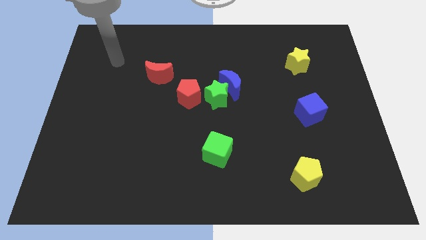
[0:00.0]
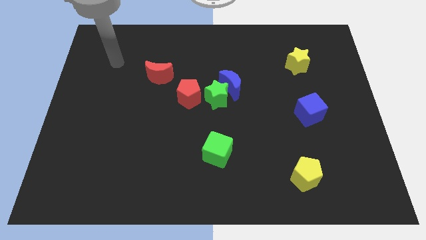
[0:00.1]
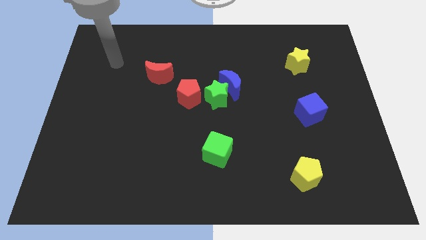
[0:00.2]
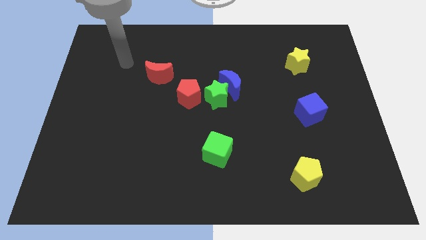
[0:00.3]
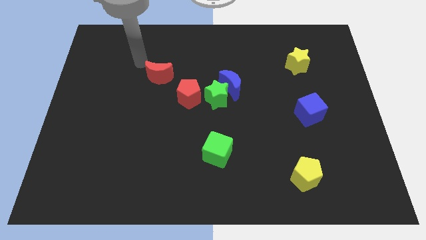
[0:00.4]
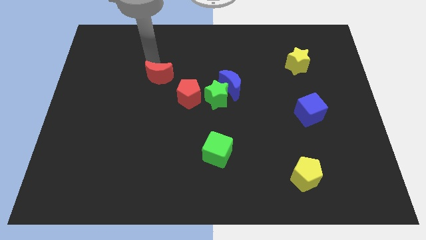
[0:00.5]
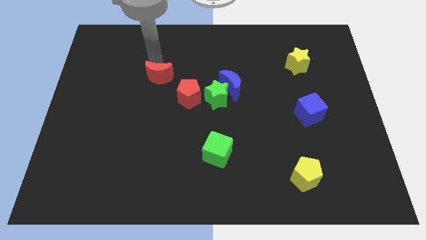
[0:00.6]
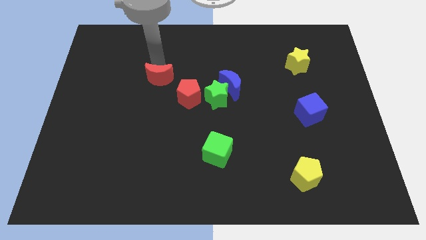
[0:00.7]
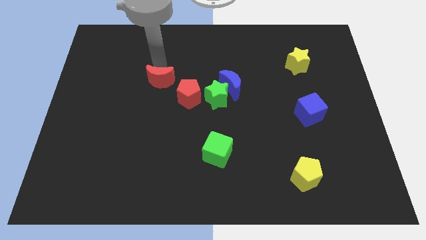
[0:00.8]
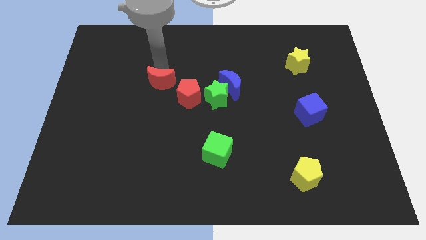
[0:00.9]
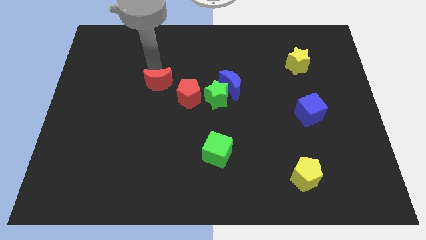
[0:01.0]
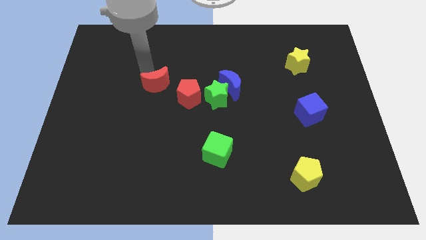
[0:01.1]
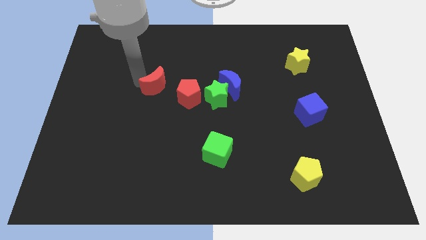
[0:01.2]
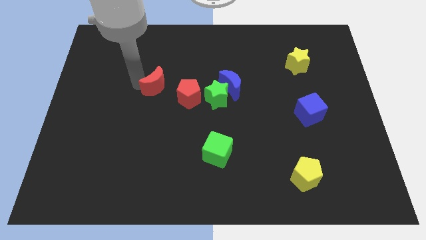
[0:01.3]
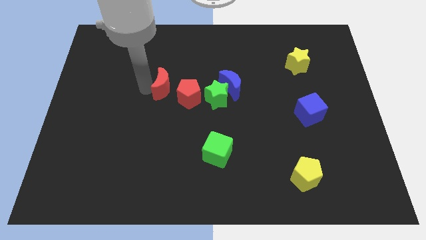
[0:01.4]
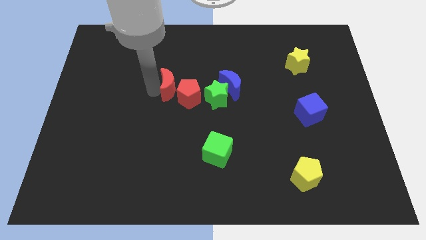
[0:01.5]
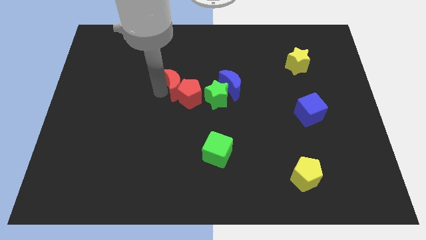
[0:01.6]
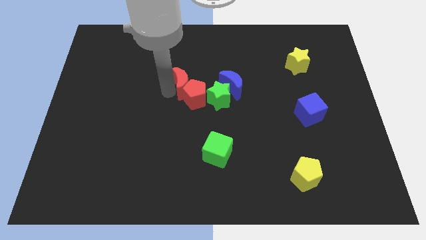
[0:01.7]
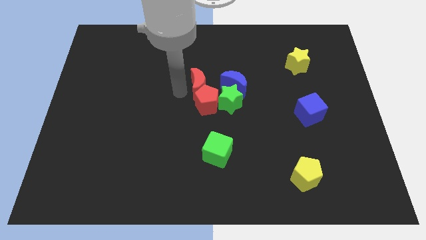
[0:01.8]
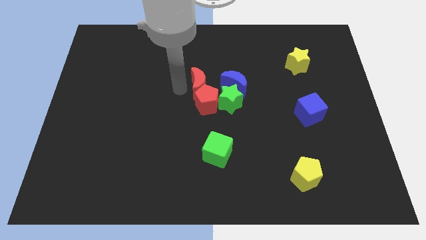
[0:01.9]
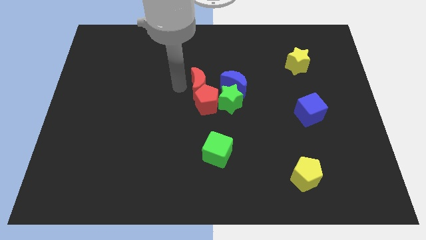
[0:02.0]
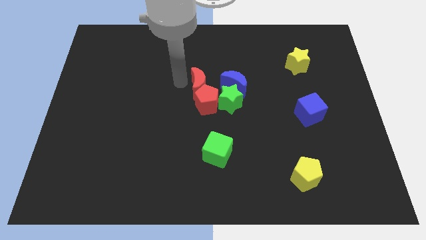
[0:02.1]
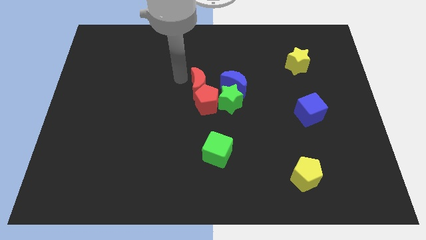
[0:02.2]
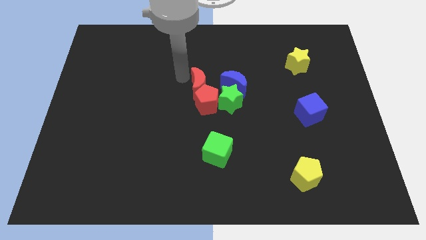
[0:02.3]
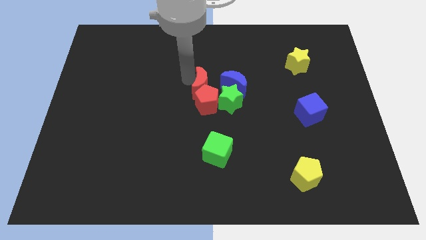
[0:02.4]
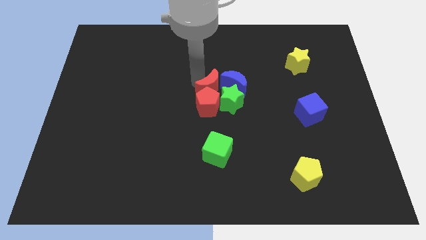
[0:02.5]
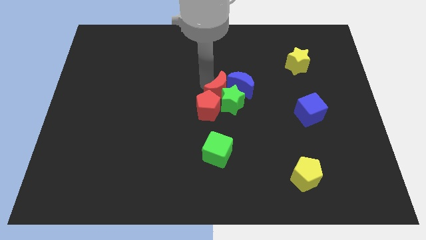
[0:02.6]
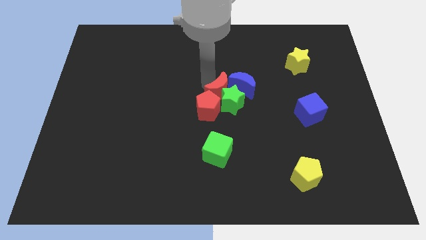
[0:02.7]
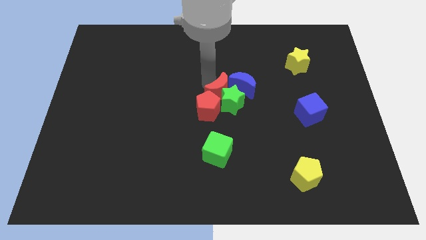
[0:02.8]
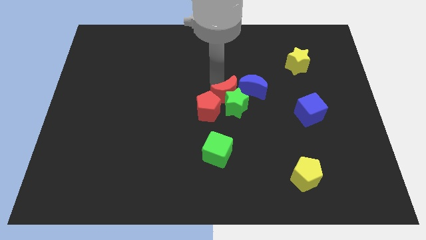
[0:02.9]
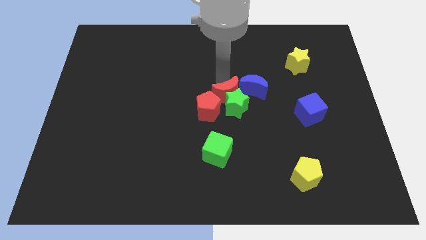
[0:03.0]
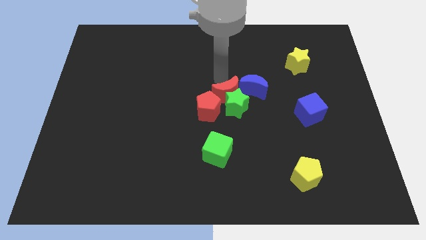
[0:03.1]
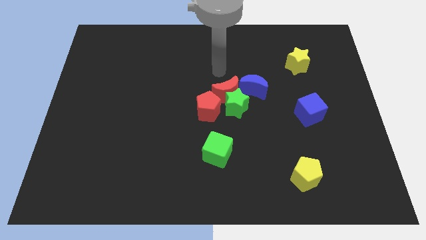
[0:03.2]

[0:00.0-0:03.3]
push the red crescent into the green star

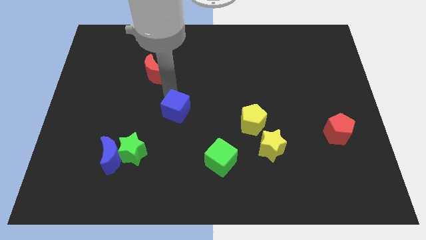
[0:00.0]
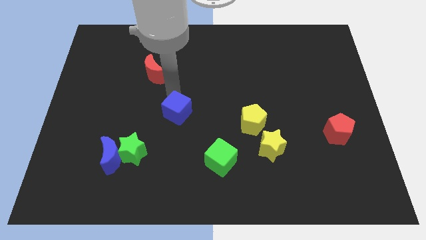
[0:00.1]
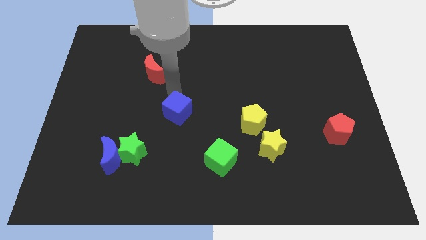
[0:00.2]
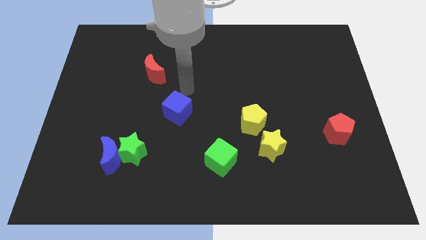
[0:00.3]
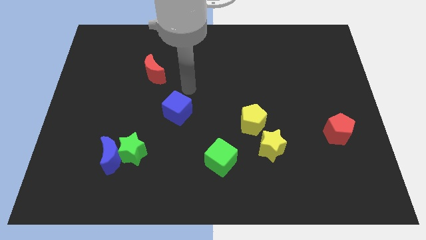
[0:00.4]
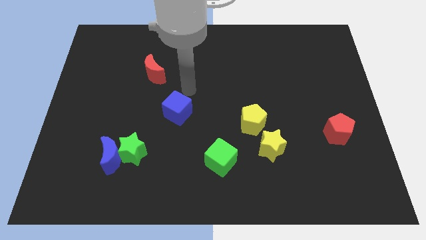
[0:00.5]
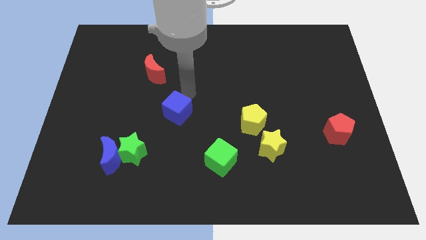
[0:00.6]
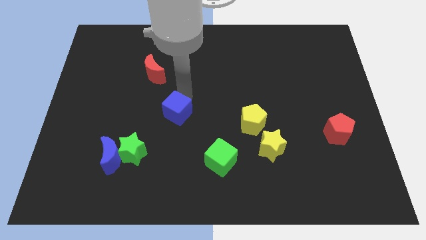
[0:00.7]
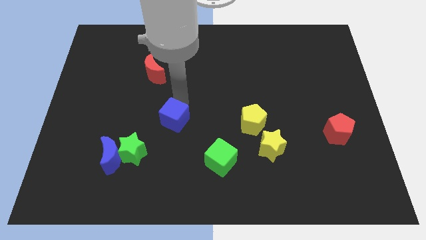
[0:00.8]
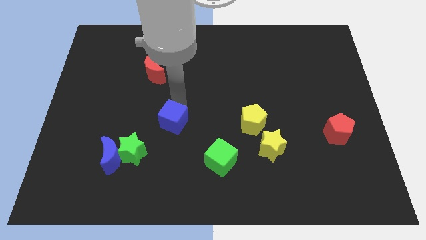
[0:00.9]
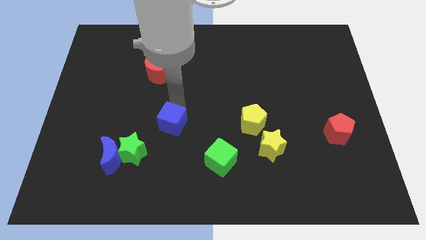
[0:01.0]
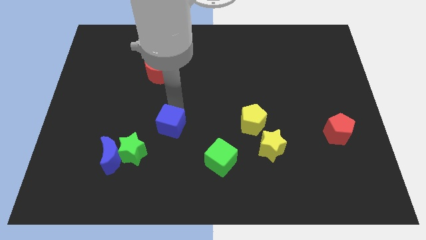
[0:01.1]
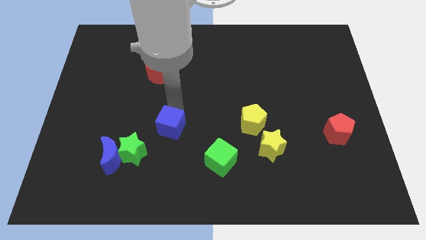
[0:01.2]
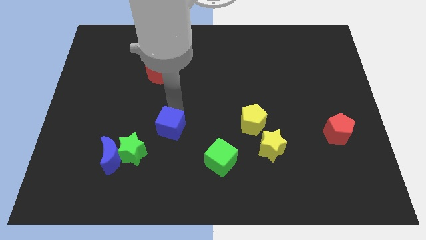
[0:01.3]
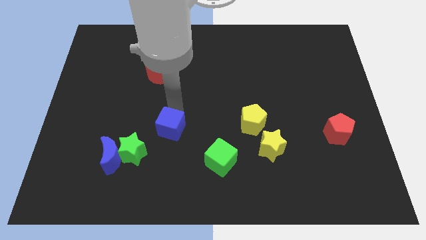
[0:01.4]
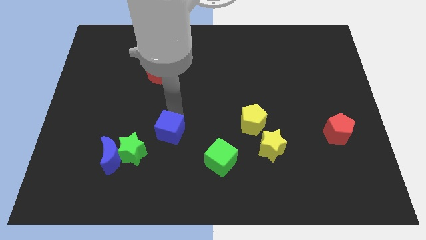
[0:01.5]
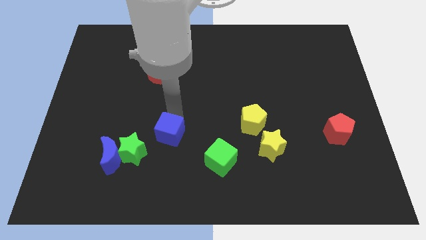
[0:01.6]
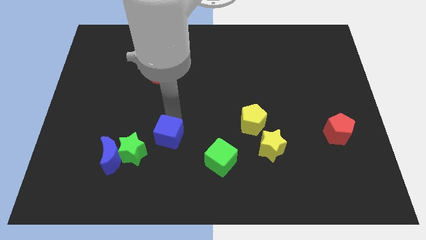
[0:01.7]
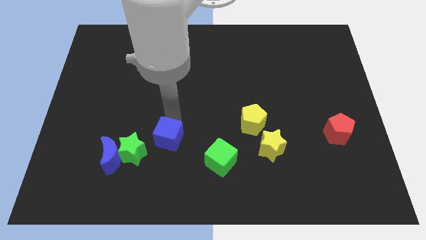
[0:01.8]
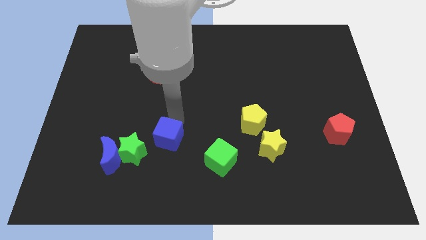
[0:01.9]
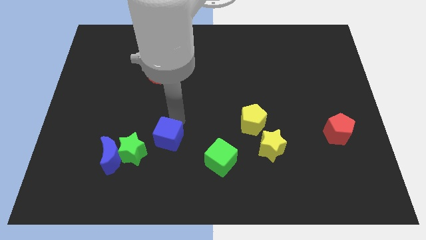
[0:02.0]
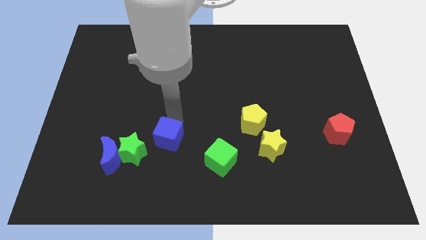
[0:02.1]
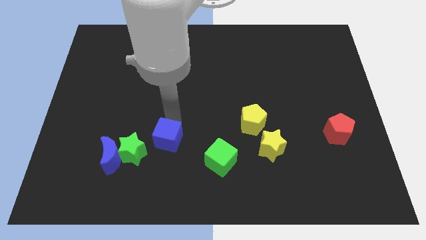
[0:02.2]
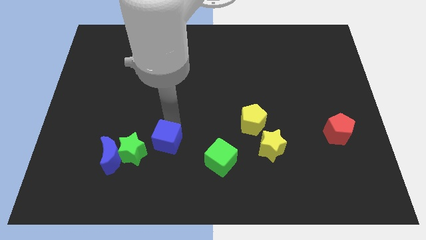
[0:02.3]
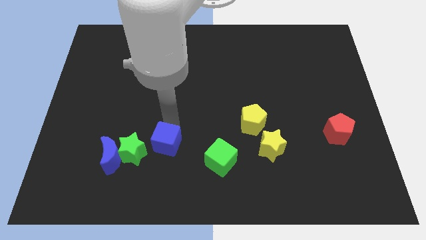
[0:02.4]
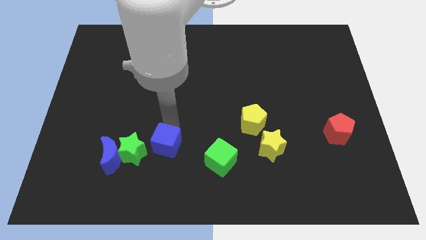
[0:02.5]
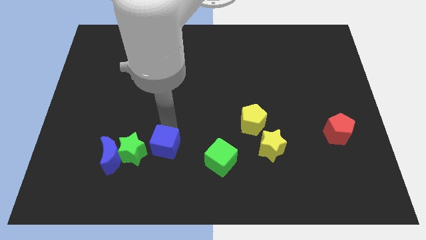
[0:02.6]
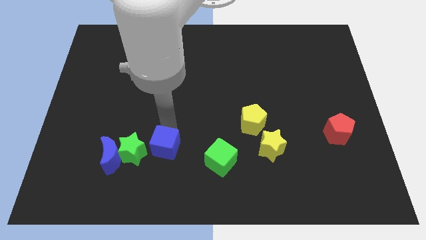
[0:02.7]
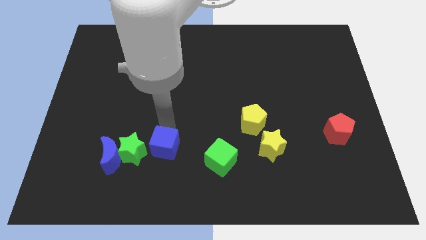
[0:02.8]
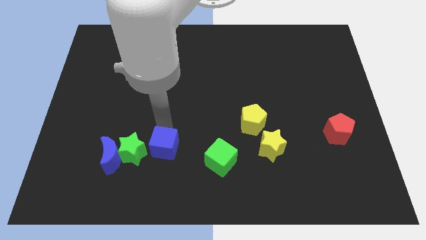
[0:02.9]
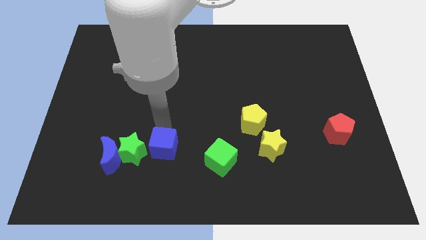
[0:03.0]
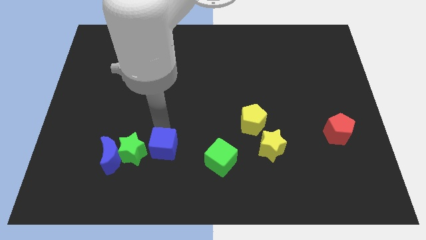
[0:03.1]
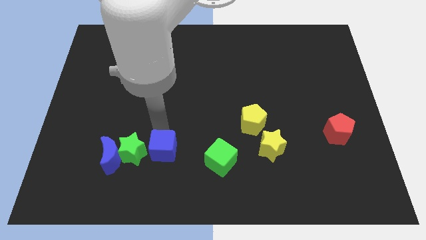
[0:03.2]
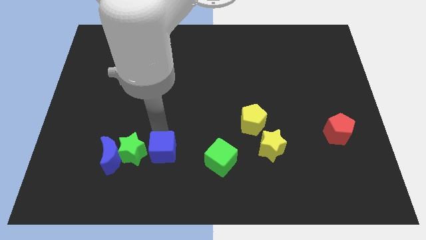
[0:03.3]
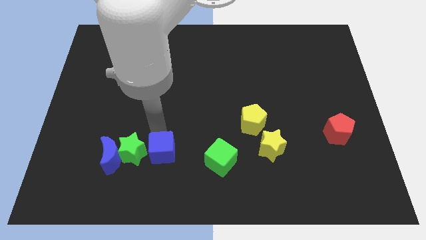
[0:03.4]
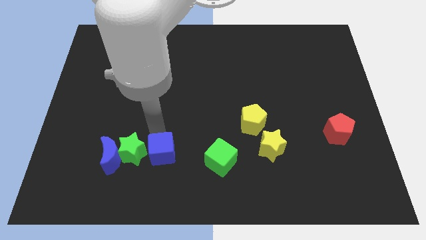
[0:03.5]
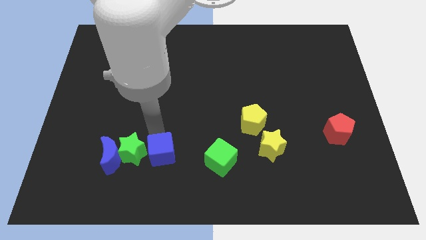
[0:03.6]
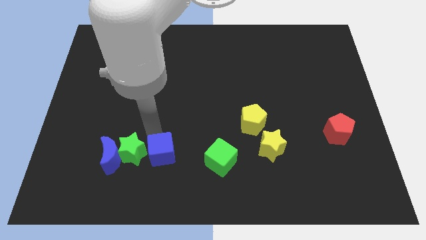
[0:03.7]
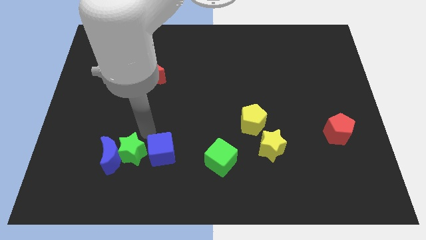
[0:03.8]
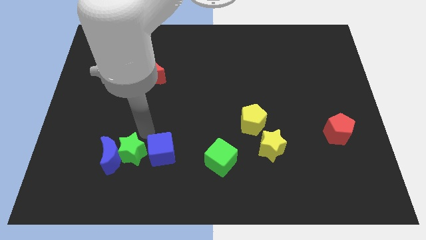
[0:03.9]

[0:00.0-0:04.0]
push the blue cube to the right of the green star

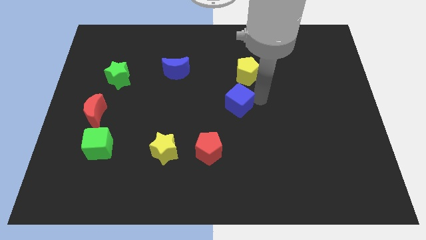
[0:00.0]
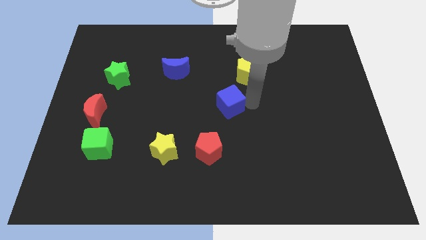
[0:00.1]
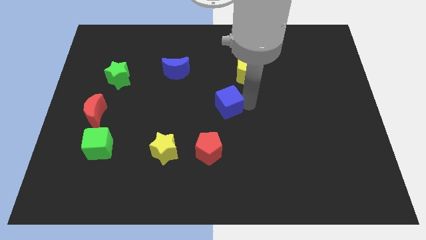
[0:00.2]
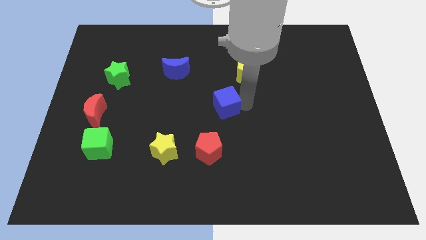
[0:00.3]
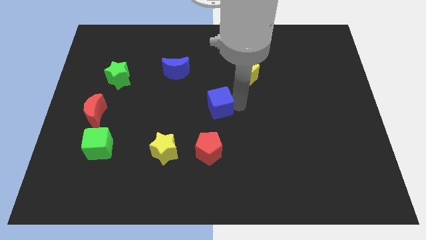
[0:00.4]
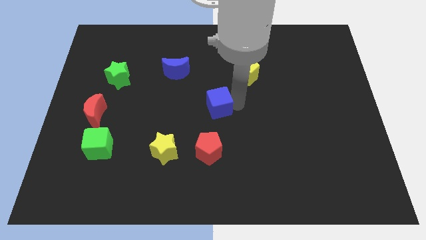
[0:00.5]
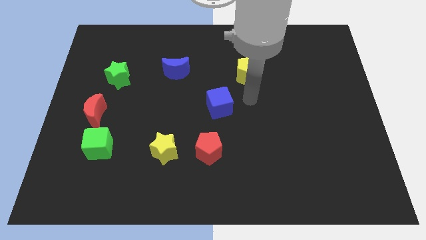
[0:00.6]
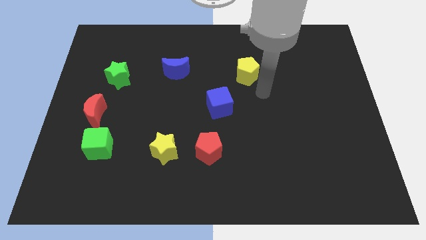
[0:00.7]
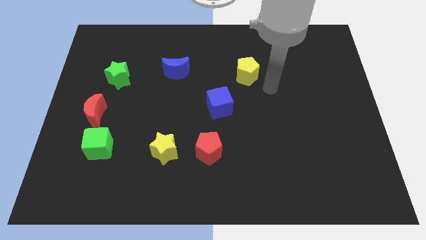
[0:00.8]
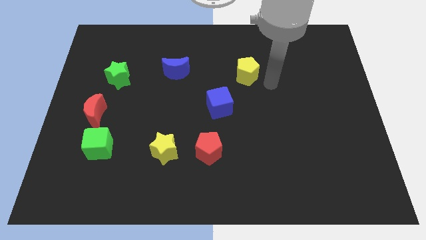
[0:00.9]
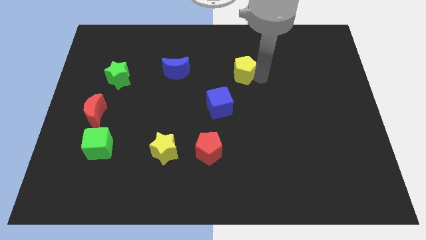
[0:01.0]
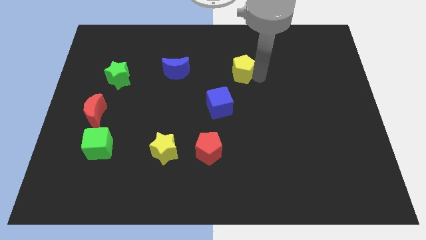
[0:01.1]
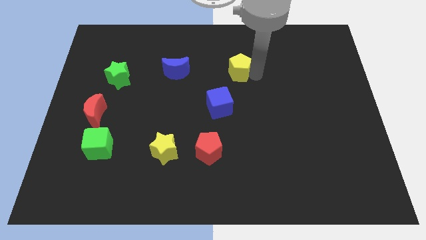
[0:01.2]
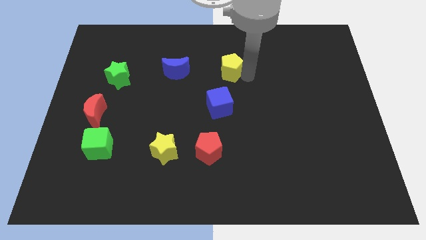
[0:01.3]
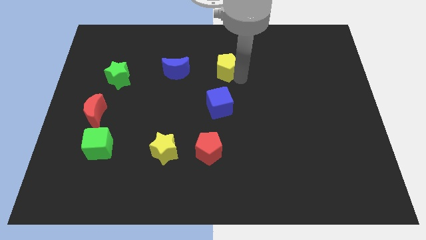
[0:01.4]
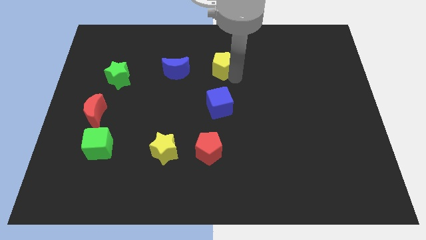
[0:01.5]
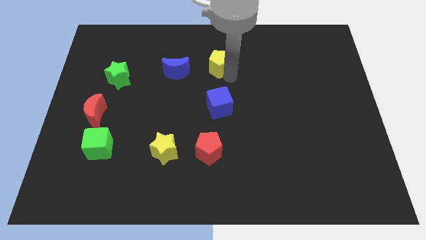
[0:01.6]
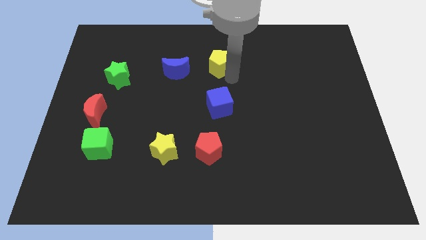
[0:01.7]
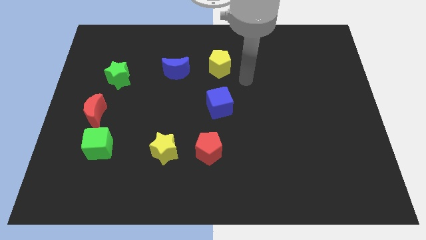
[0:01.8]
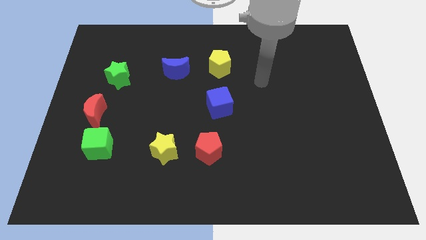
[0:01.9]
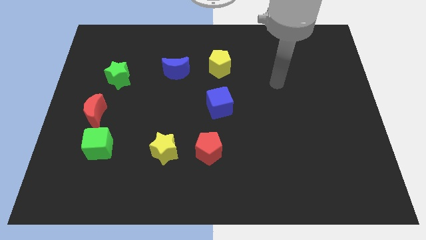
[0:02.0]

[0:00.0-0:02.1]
place the yellow pentagon above the blue cube
